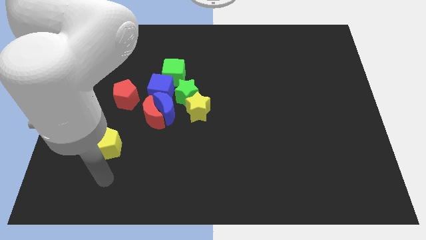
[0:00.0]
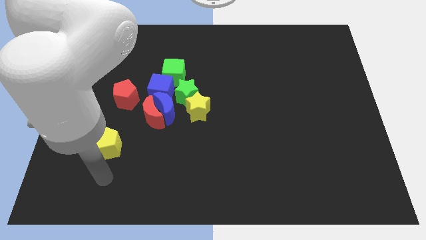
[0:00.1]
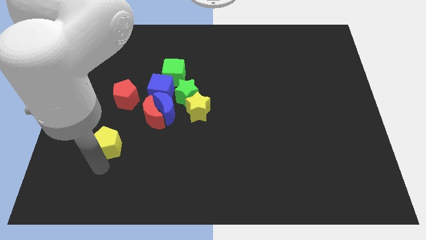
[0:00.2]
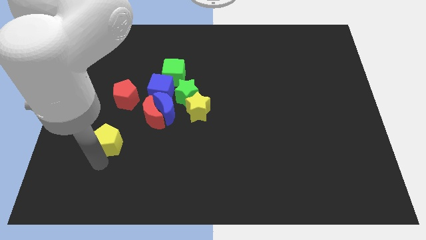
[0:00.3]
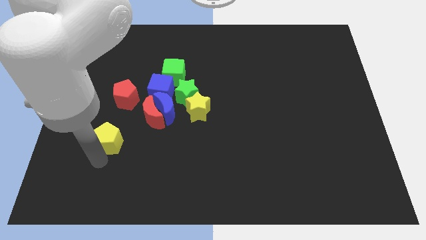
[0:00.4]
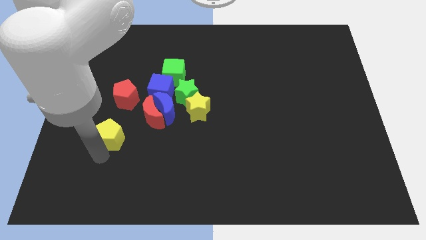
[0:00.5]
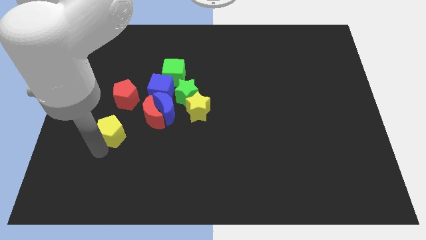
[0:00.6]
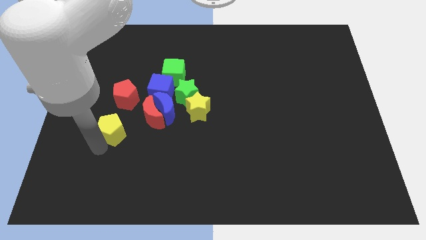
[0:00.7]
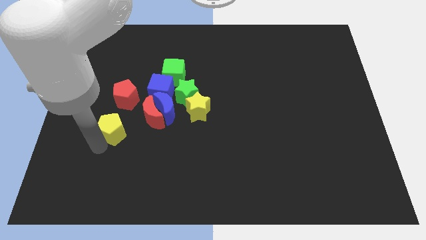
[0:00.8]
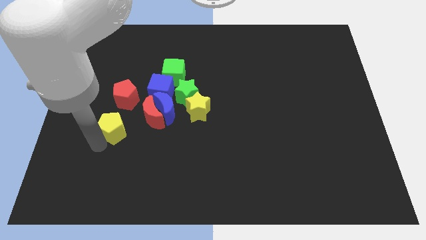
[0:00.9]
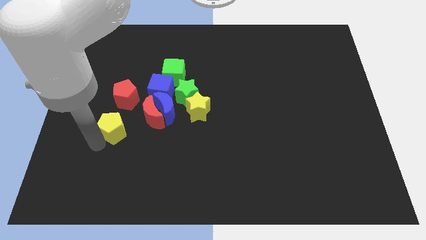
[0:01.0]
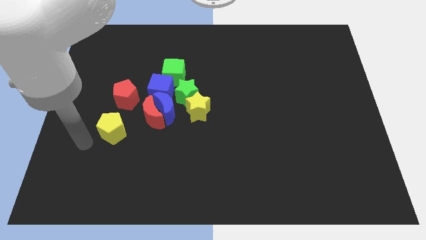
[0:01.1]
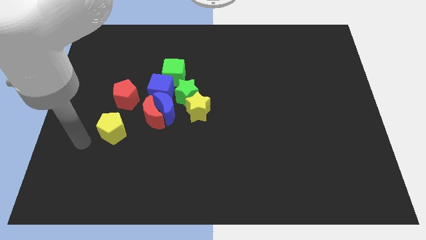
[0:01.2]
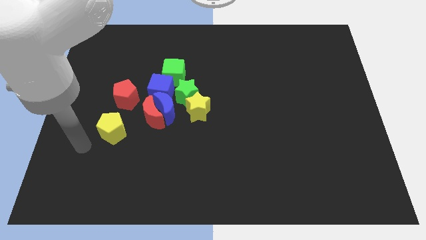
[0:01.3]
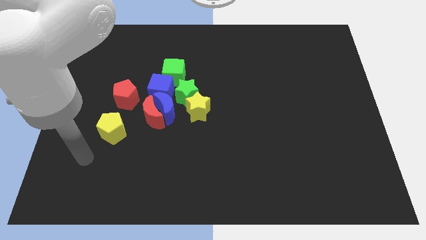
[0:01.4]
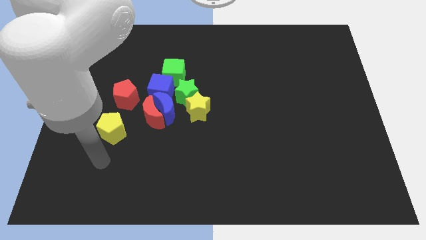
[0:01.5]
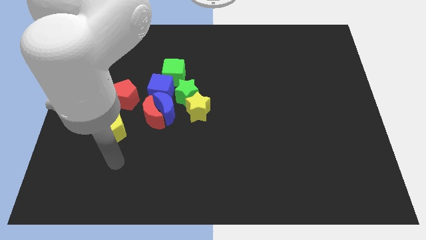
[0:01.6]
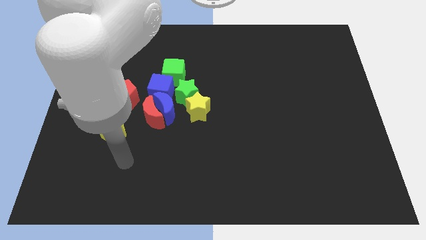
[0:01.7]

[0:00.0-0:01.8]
place the yelloe pentagon to the bottom of red pentagon

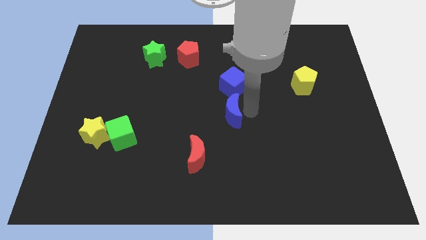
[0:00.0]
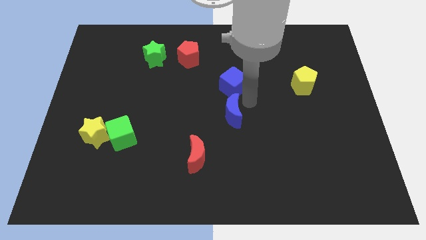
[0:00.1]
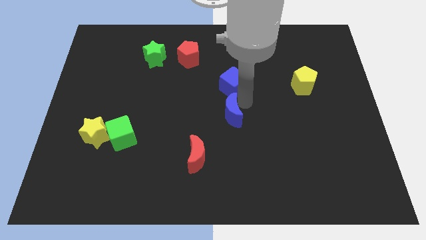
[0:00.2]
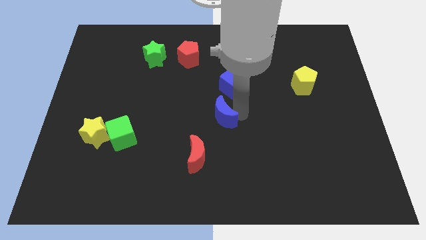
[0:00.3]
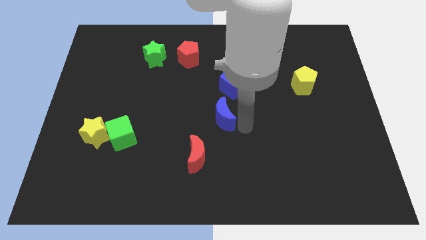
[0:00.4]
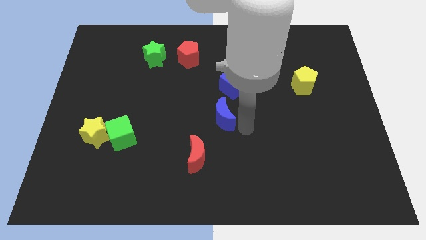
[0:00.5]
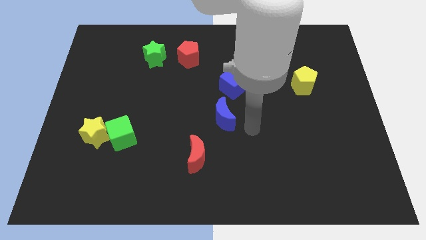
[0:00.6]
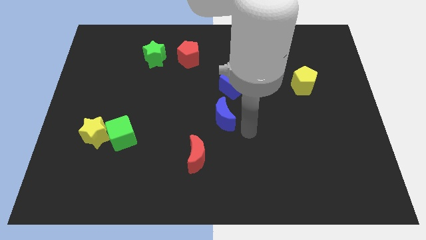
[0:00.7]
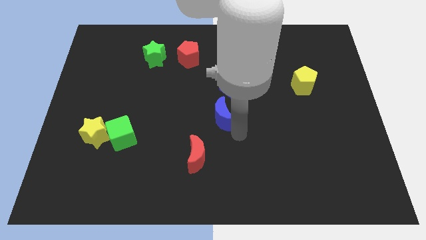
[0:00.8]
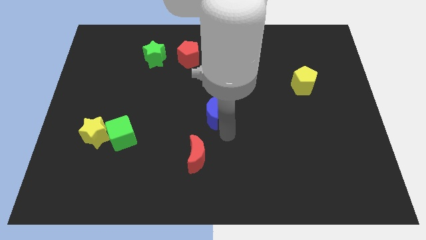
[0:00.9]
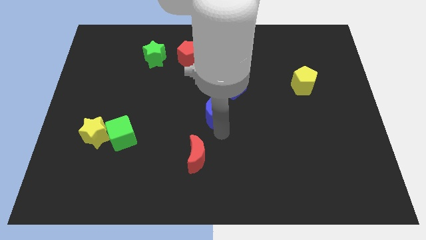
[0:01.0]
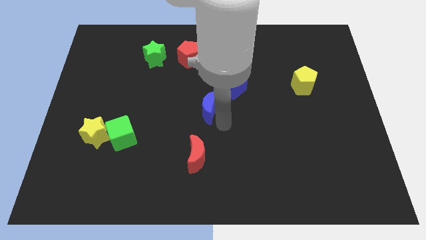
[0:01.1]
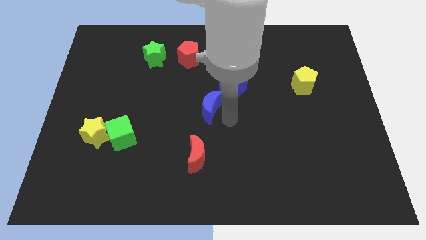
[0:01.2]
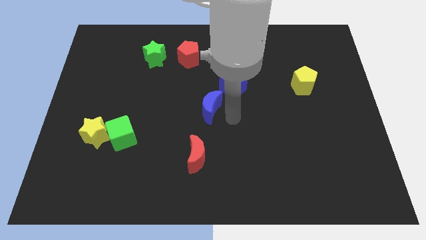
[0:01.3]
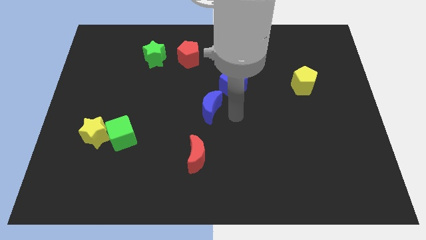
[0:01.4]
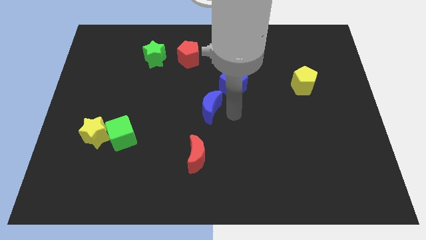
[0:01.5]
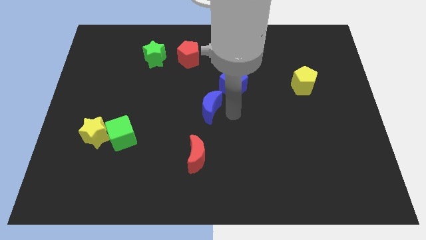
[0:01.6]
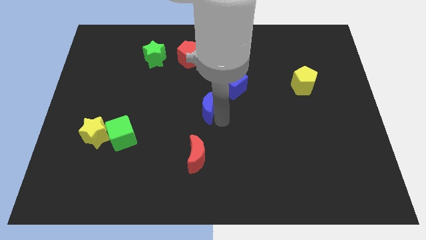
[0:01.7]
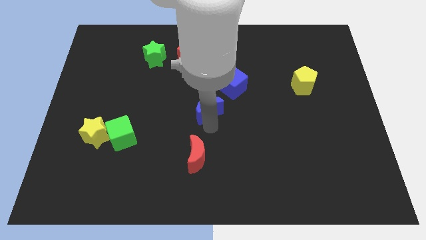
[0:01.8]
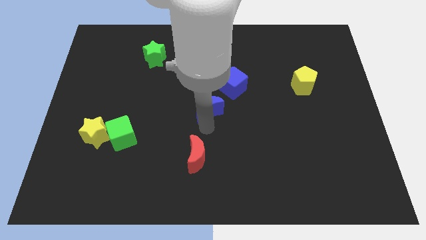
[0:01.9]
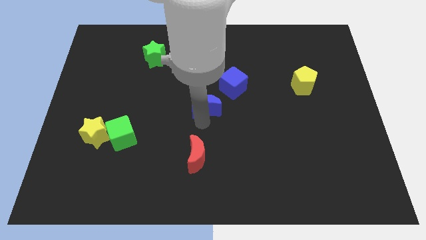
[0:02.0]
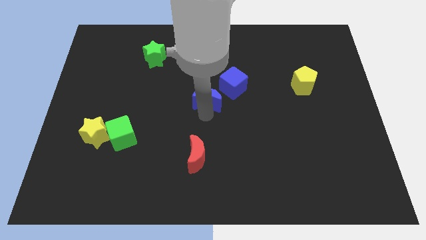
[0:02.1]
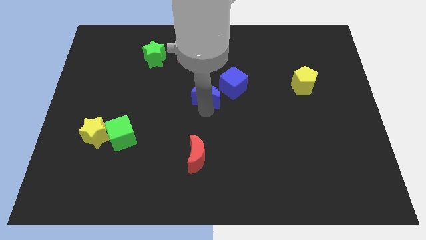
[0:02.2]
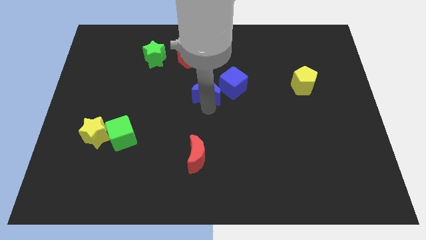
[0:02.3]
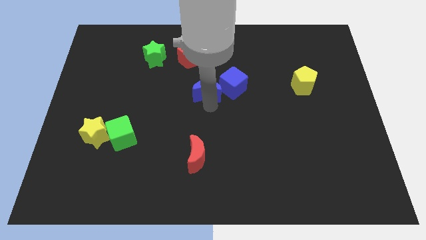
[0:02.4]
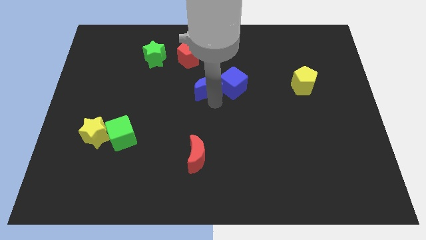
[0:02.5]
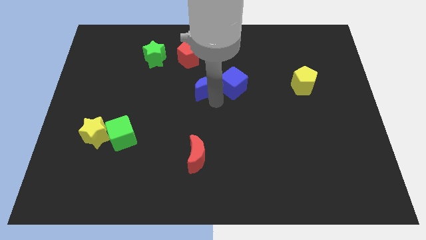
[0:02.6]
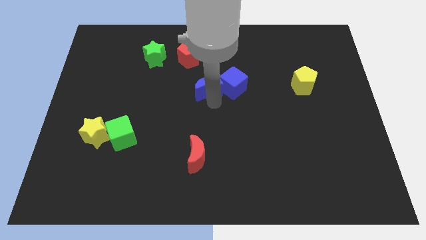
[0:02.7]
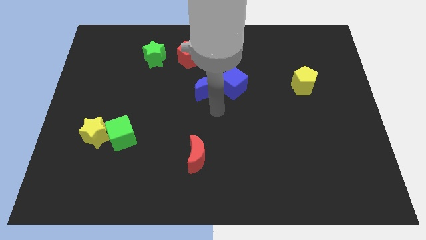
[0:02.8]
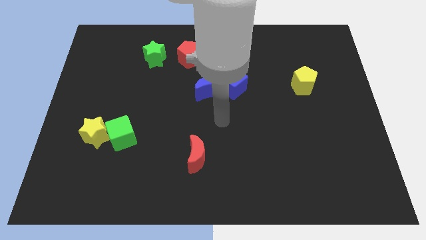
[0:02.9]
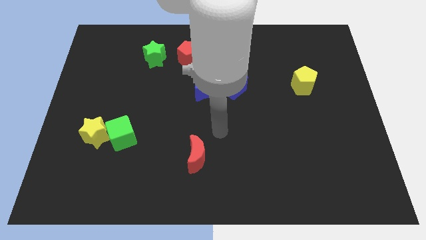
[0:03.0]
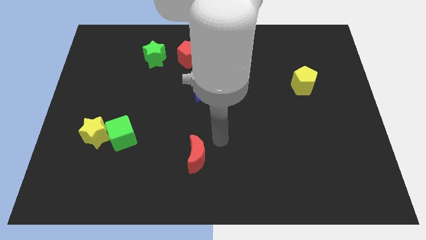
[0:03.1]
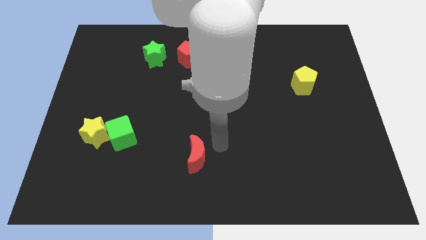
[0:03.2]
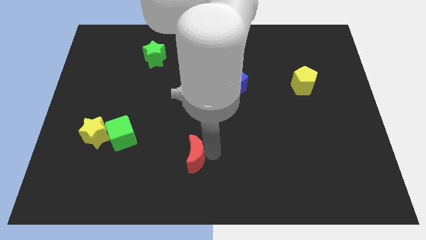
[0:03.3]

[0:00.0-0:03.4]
slightly move the blue moon to the left side of the blue cube

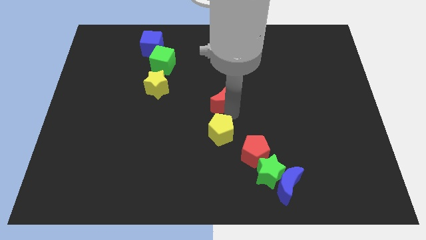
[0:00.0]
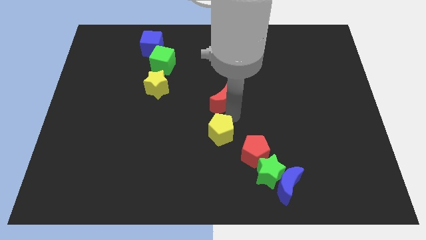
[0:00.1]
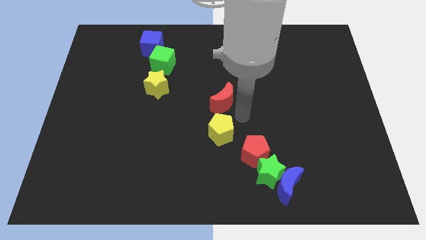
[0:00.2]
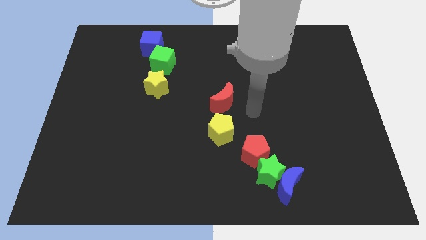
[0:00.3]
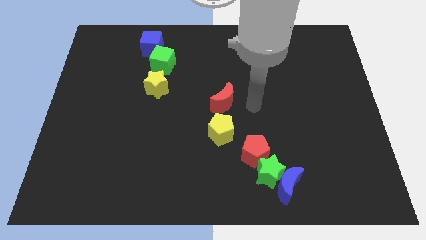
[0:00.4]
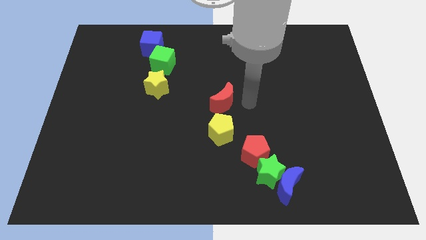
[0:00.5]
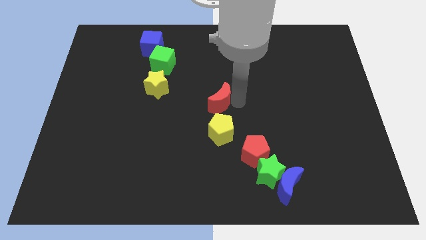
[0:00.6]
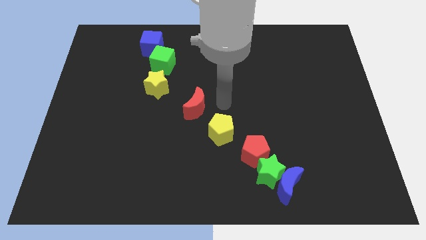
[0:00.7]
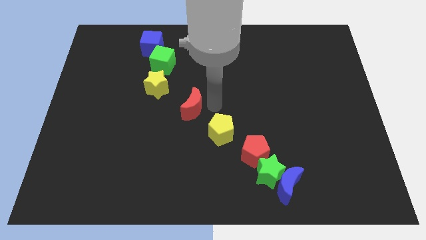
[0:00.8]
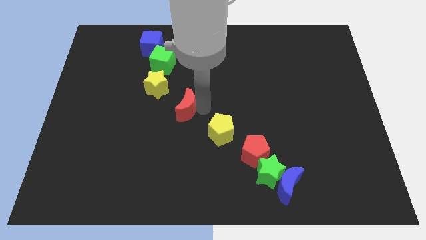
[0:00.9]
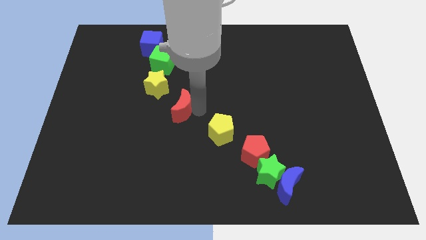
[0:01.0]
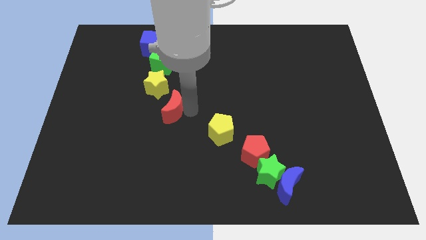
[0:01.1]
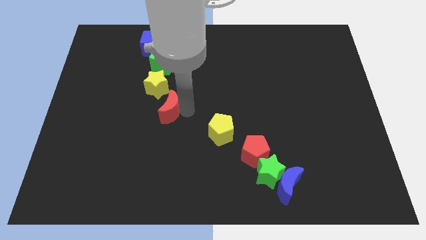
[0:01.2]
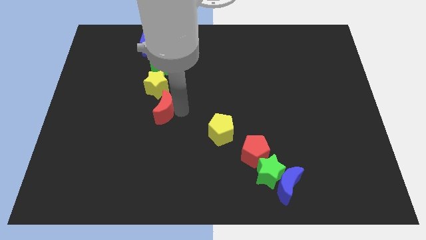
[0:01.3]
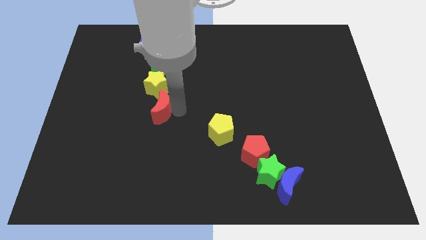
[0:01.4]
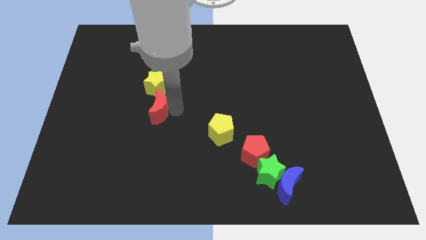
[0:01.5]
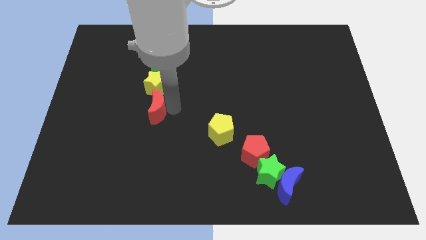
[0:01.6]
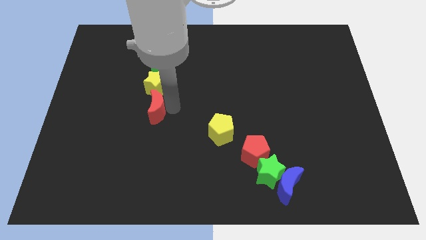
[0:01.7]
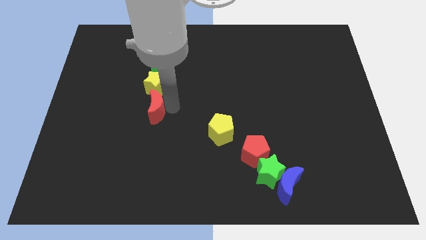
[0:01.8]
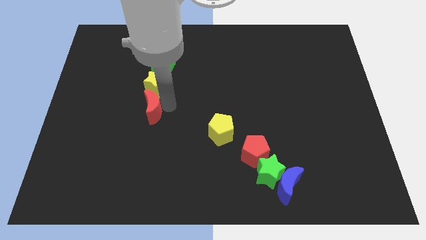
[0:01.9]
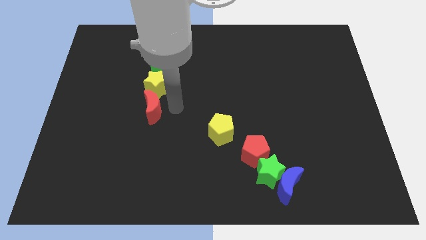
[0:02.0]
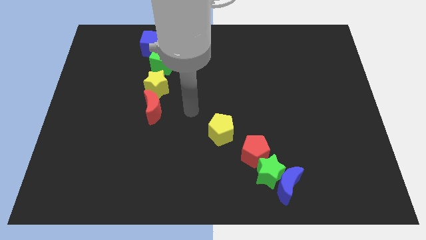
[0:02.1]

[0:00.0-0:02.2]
place the red moon down to the yellow star

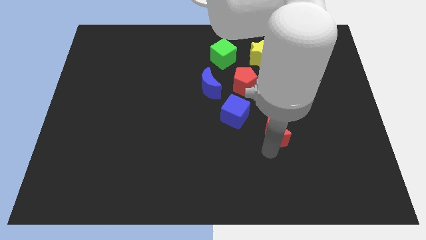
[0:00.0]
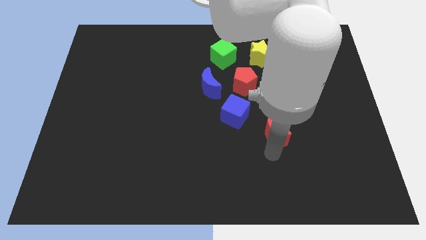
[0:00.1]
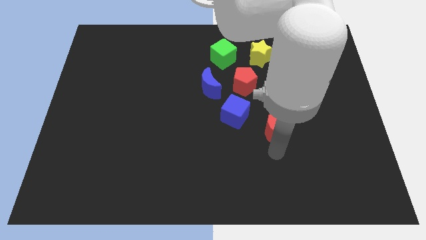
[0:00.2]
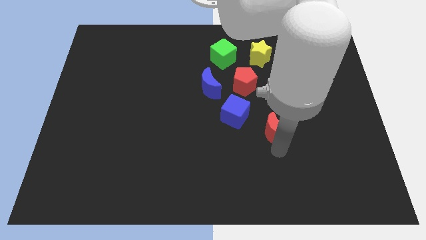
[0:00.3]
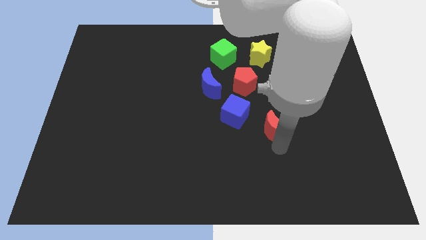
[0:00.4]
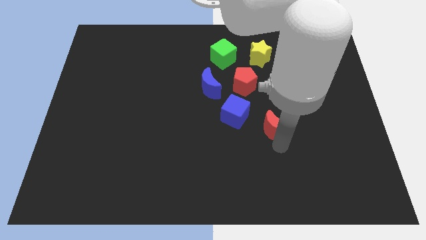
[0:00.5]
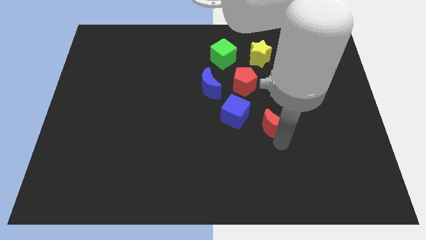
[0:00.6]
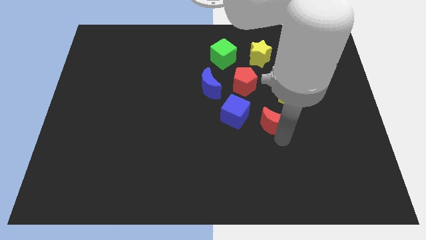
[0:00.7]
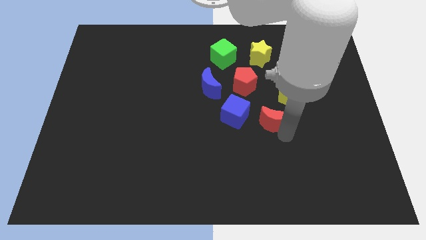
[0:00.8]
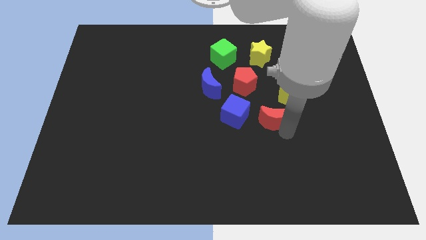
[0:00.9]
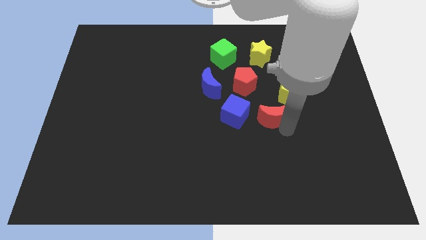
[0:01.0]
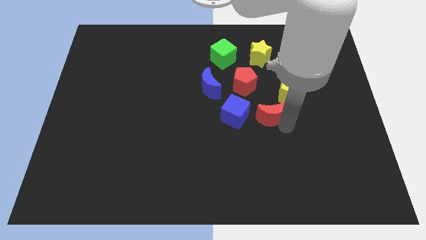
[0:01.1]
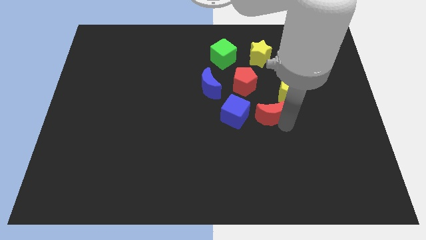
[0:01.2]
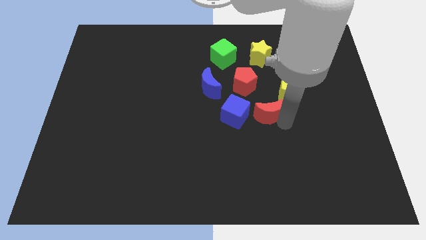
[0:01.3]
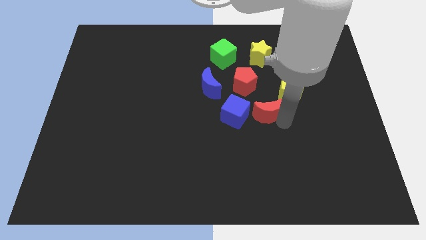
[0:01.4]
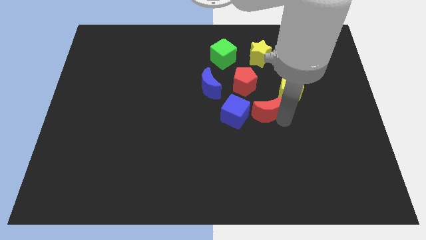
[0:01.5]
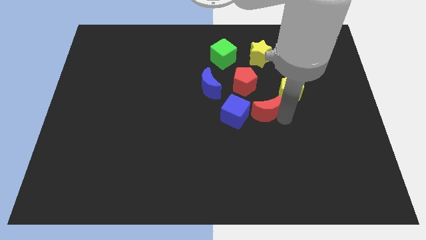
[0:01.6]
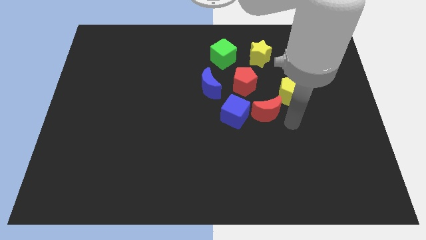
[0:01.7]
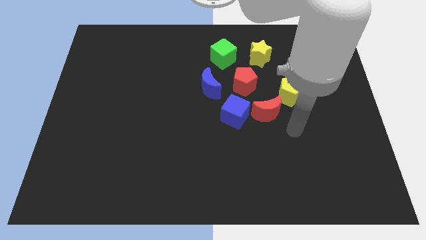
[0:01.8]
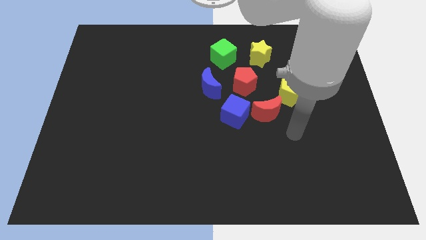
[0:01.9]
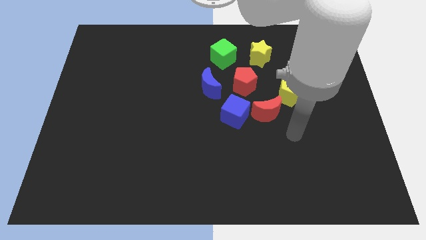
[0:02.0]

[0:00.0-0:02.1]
place the red moon between the yellow pentagon and blue cube
